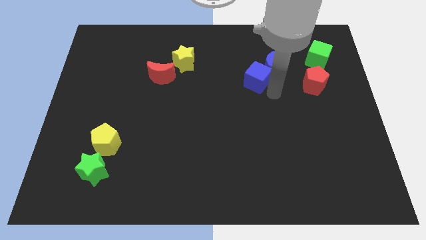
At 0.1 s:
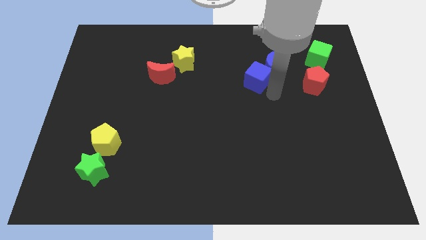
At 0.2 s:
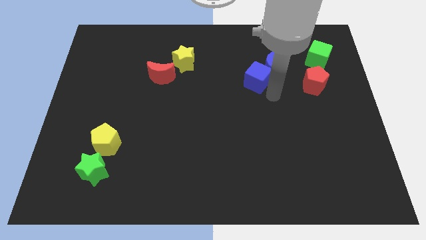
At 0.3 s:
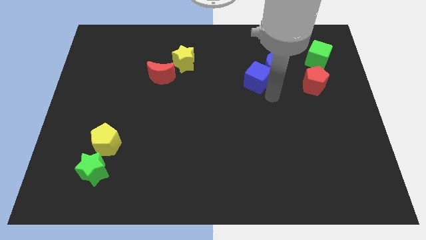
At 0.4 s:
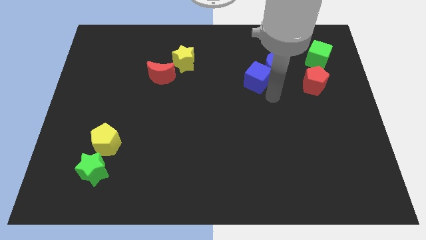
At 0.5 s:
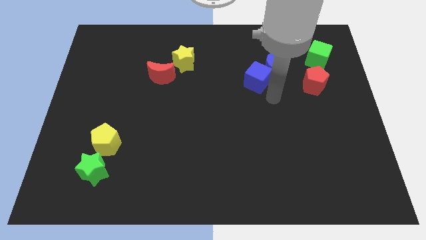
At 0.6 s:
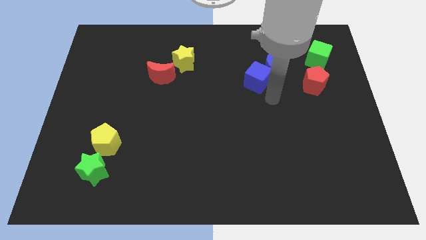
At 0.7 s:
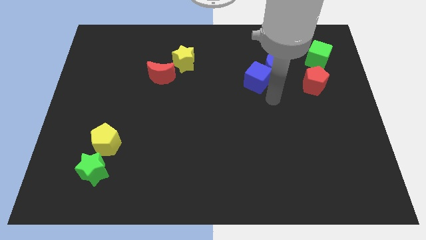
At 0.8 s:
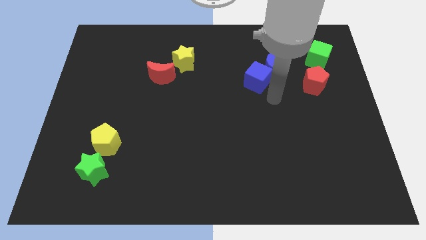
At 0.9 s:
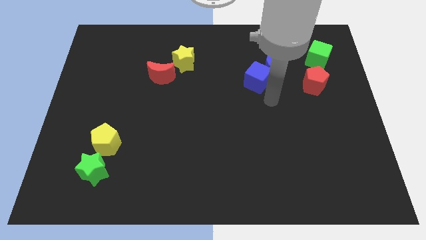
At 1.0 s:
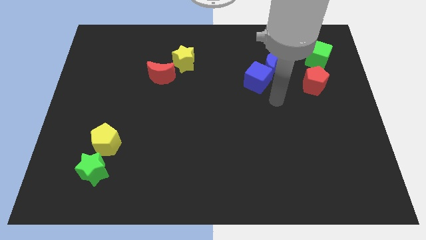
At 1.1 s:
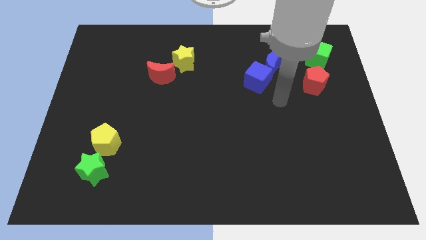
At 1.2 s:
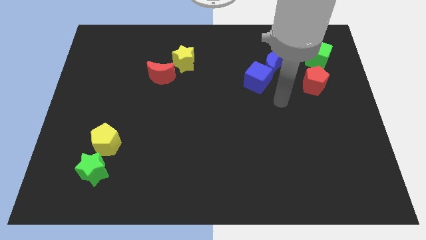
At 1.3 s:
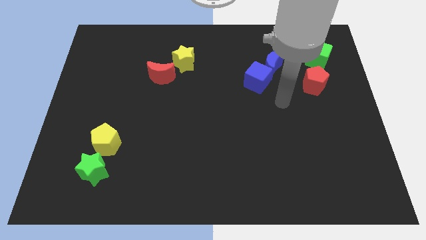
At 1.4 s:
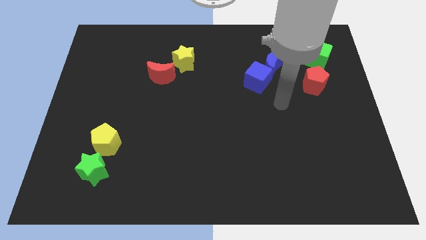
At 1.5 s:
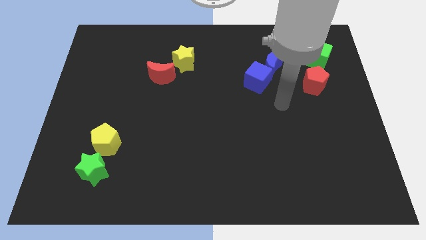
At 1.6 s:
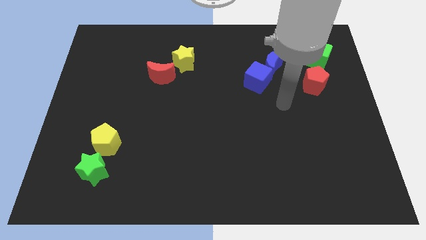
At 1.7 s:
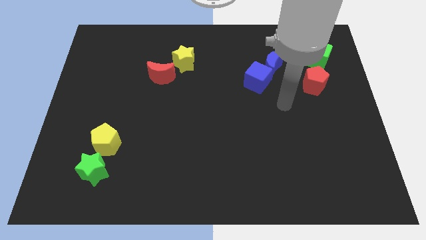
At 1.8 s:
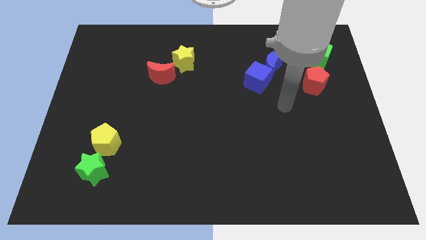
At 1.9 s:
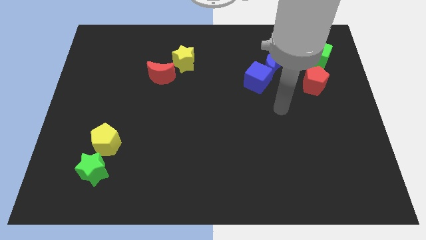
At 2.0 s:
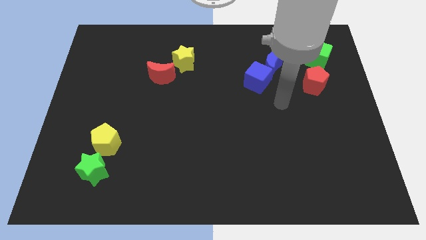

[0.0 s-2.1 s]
move your arm away from blue cube

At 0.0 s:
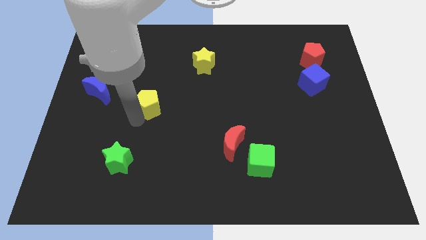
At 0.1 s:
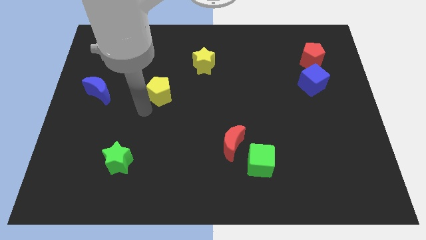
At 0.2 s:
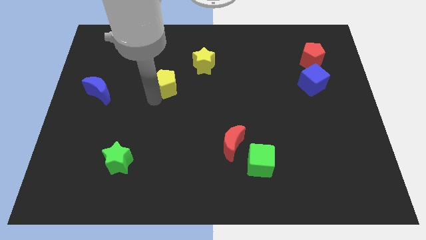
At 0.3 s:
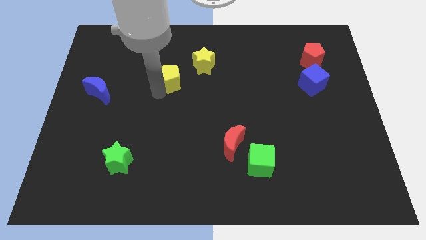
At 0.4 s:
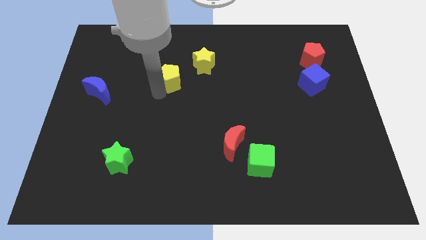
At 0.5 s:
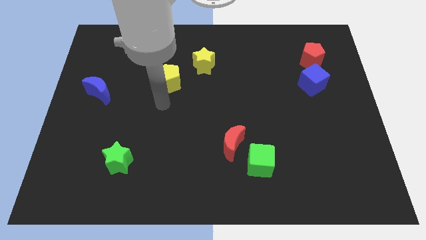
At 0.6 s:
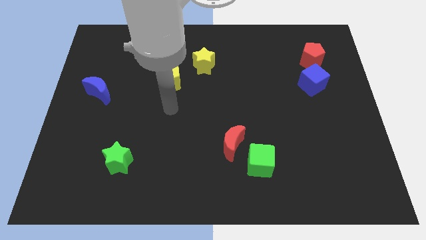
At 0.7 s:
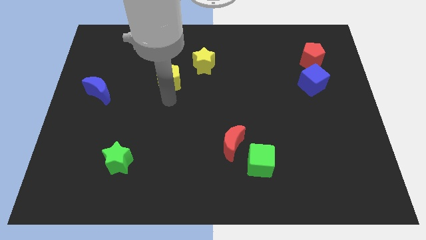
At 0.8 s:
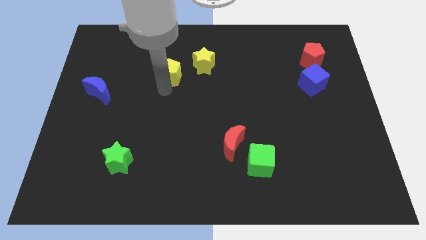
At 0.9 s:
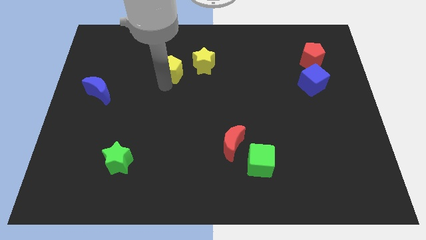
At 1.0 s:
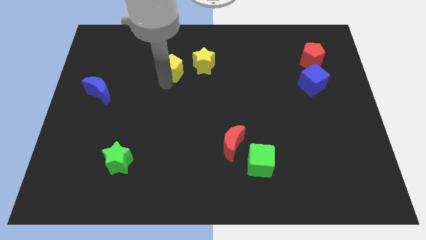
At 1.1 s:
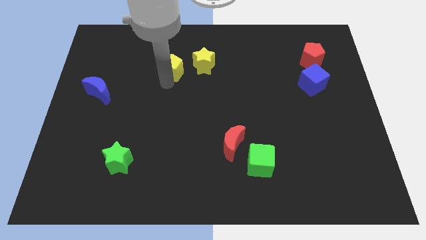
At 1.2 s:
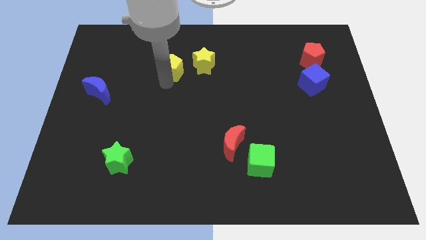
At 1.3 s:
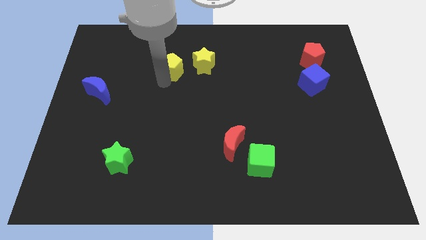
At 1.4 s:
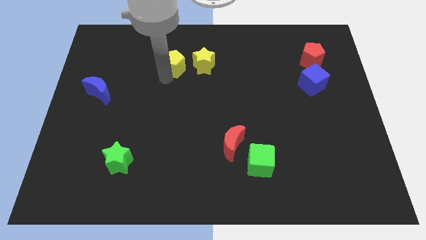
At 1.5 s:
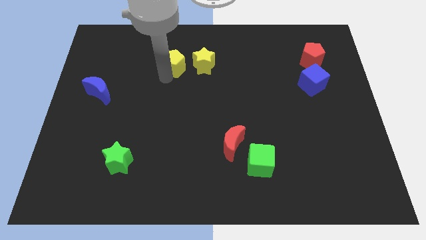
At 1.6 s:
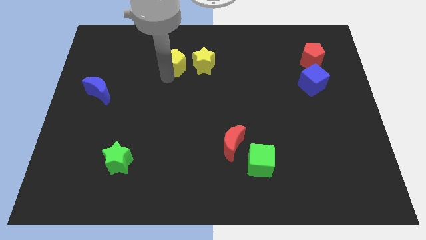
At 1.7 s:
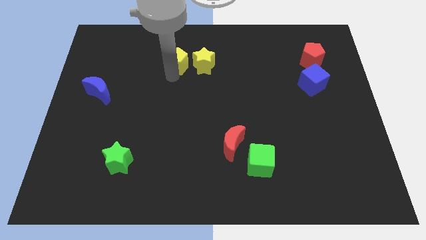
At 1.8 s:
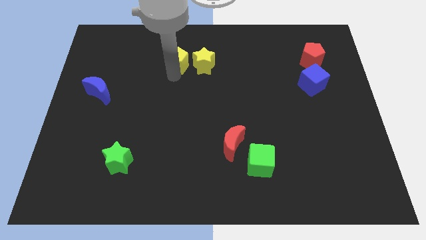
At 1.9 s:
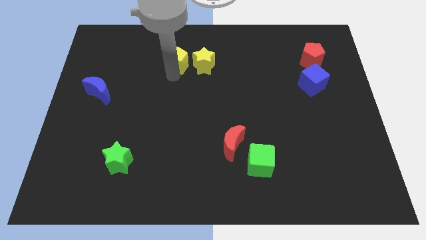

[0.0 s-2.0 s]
place the yellow pentagon beside the yellow star

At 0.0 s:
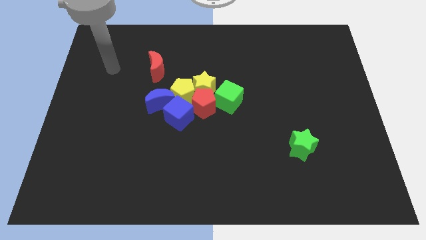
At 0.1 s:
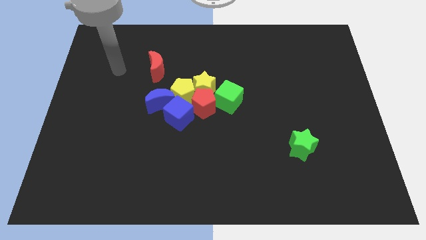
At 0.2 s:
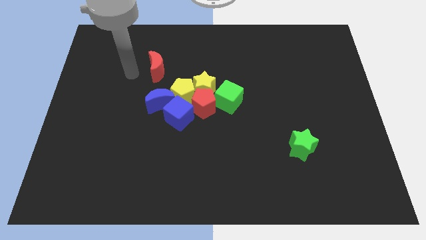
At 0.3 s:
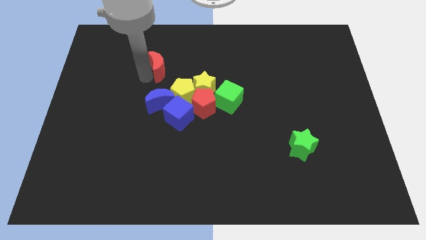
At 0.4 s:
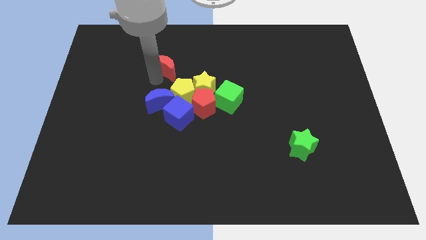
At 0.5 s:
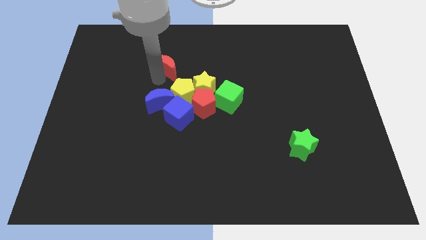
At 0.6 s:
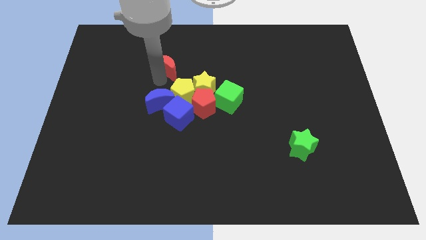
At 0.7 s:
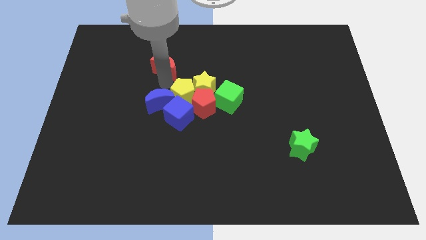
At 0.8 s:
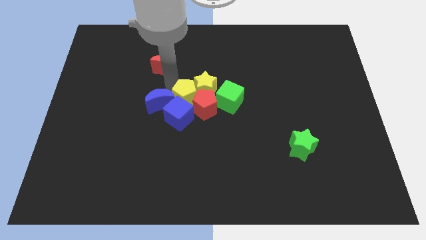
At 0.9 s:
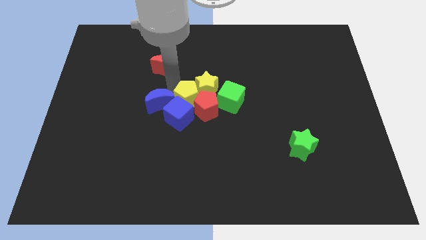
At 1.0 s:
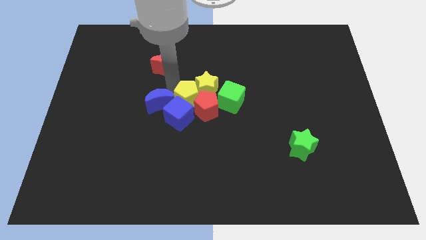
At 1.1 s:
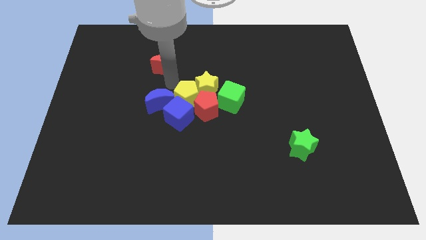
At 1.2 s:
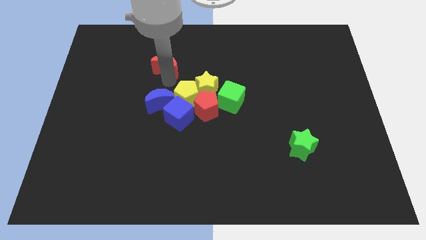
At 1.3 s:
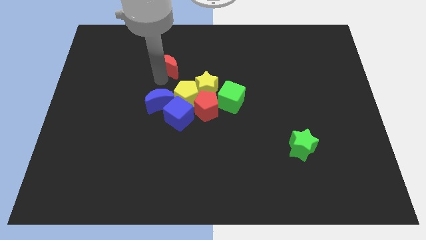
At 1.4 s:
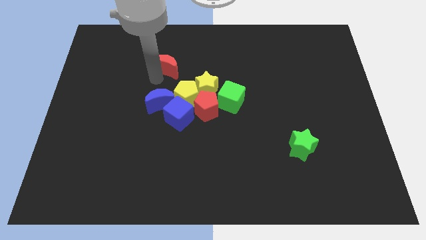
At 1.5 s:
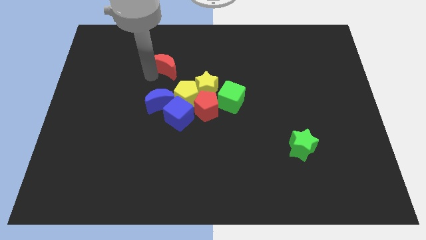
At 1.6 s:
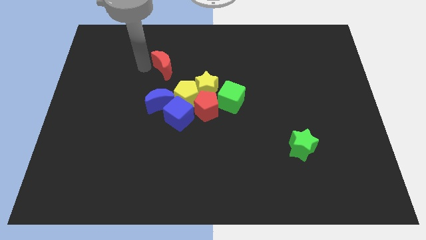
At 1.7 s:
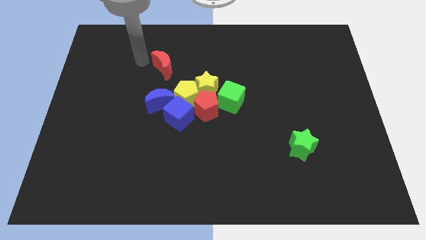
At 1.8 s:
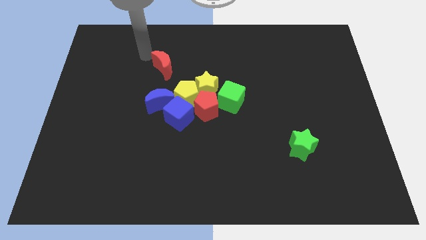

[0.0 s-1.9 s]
move your arm to the top side of the red crescent

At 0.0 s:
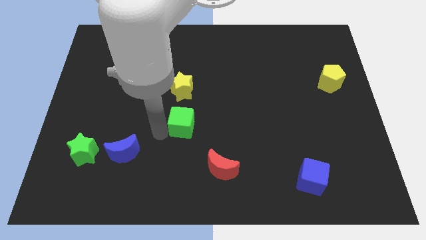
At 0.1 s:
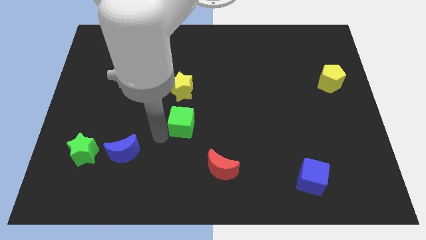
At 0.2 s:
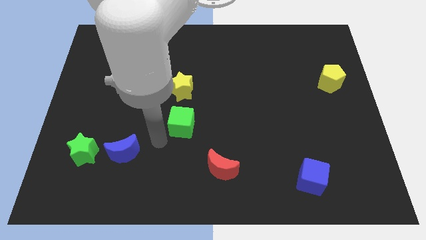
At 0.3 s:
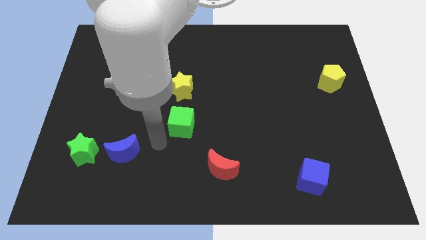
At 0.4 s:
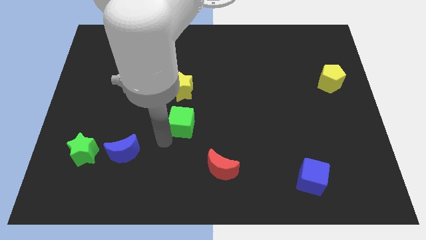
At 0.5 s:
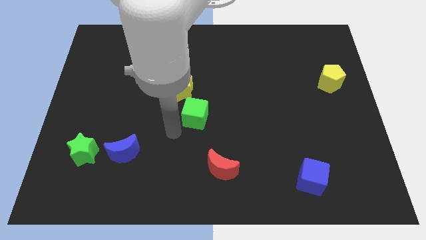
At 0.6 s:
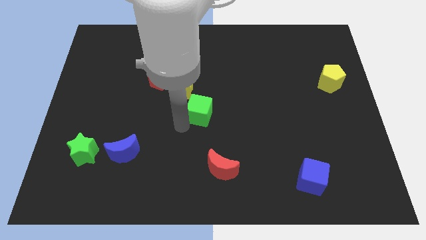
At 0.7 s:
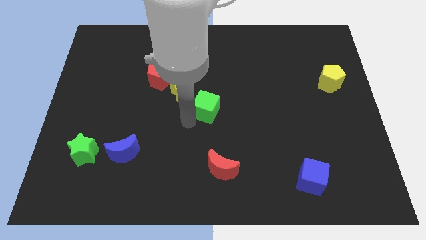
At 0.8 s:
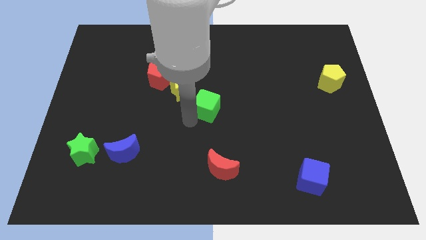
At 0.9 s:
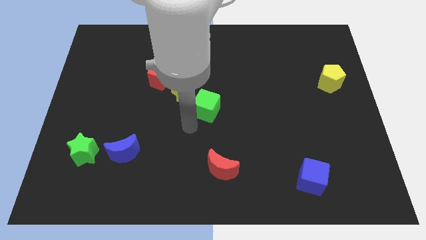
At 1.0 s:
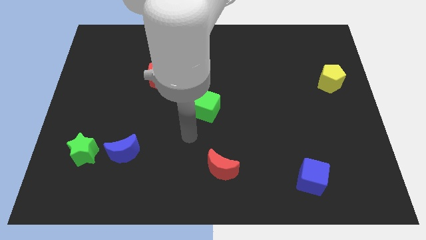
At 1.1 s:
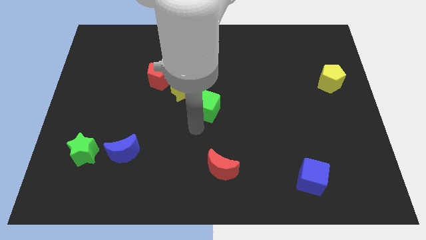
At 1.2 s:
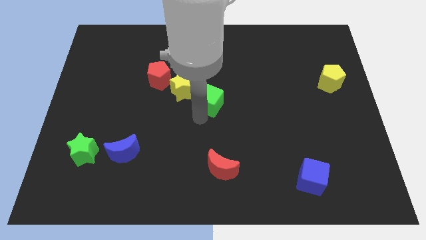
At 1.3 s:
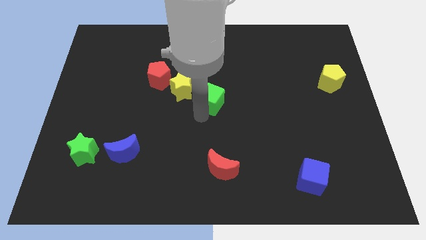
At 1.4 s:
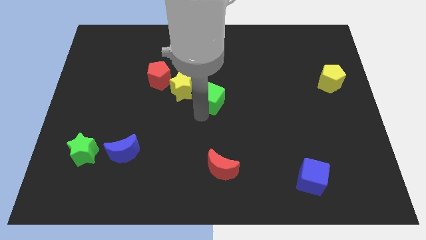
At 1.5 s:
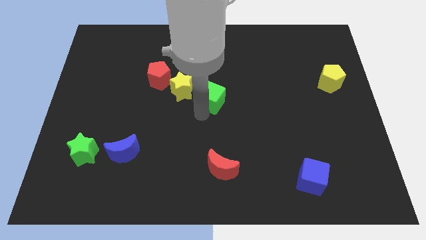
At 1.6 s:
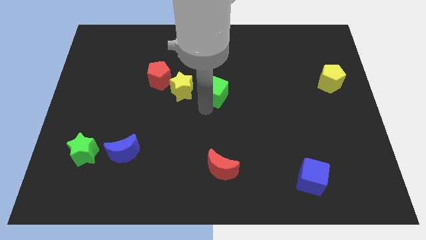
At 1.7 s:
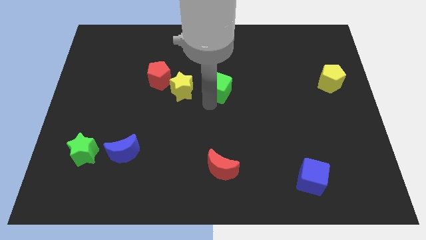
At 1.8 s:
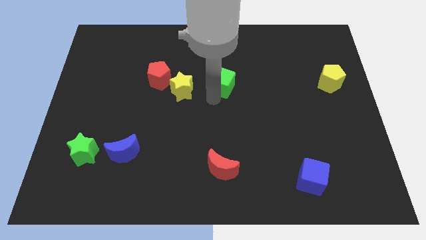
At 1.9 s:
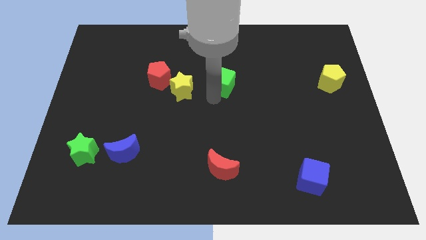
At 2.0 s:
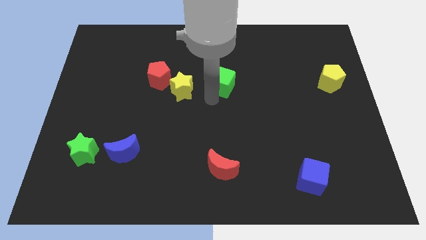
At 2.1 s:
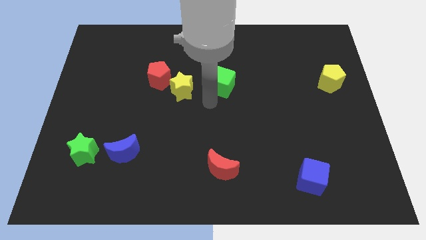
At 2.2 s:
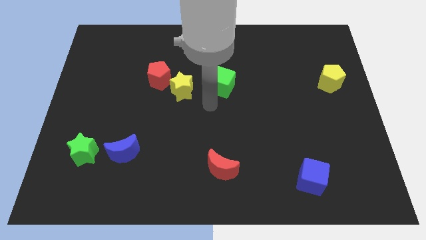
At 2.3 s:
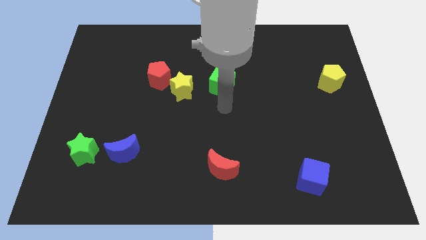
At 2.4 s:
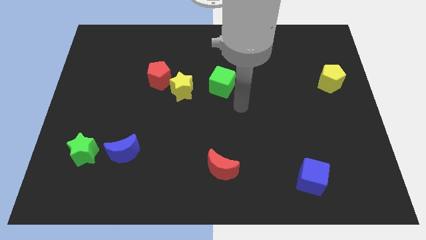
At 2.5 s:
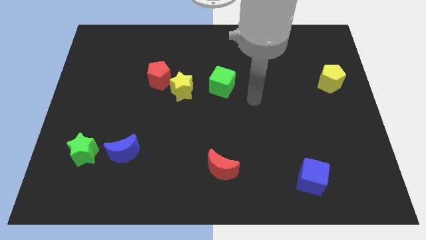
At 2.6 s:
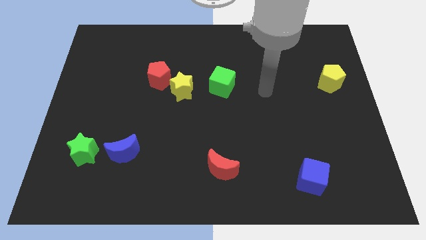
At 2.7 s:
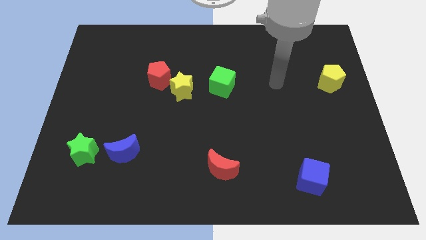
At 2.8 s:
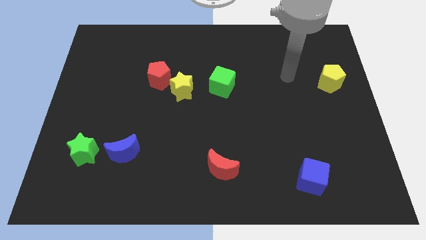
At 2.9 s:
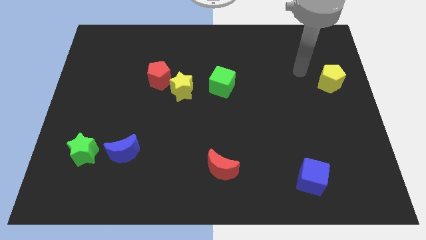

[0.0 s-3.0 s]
push the green cube to the right side of the yellow star
